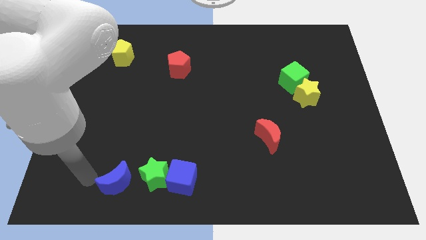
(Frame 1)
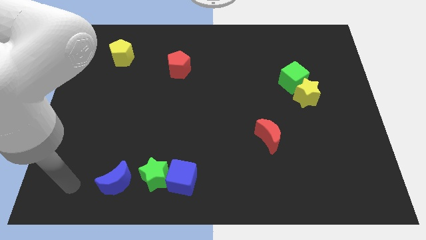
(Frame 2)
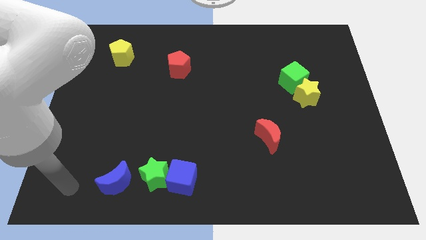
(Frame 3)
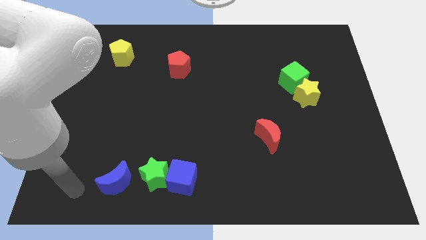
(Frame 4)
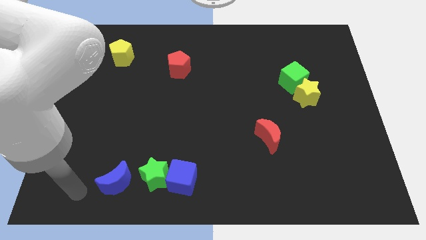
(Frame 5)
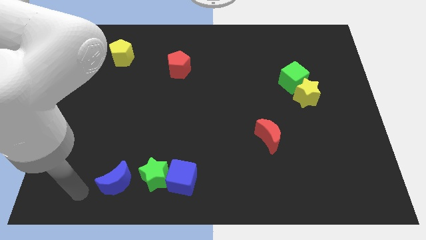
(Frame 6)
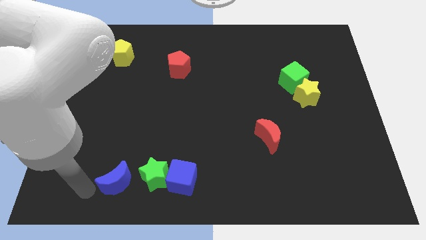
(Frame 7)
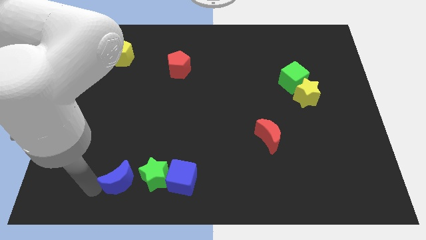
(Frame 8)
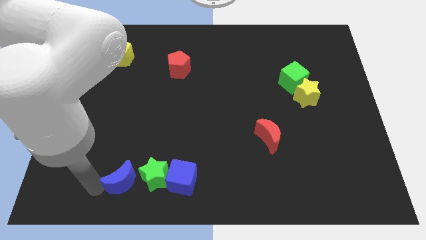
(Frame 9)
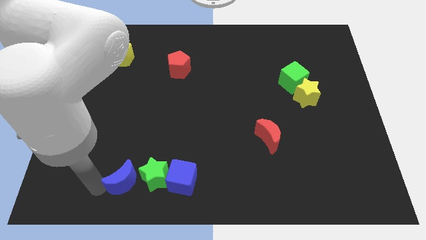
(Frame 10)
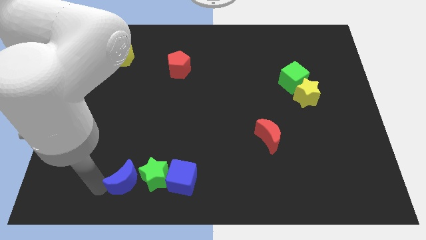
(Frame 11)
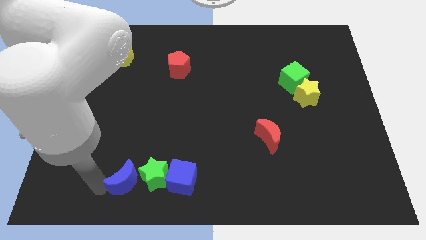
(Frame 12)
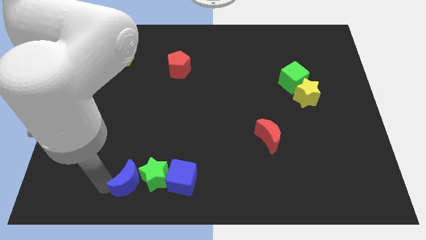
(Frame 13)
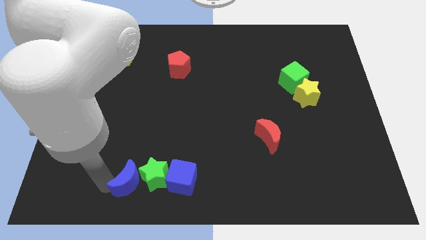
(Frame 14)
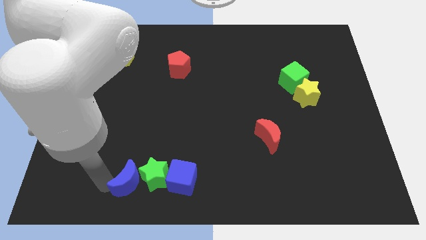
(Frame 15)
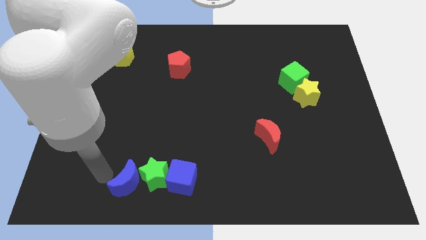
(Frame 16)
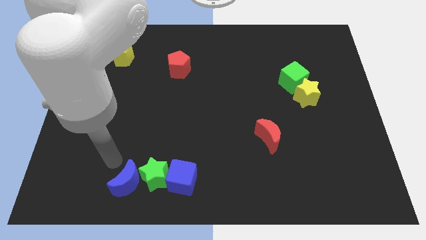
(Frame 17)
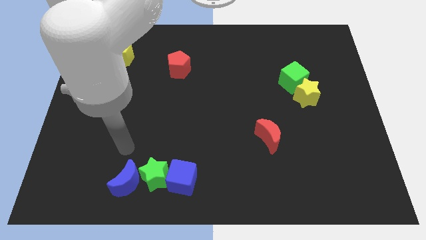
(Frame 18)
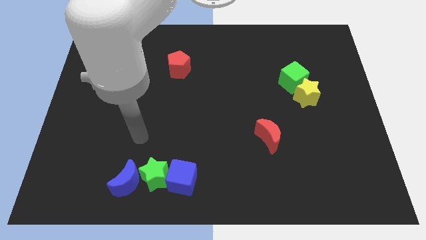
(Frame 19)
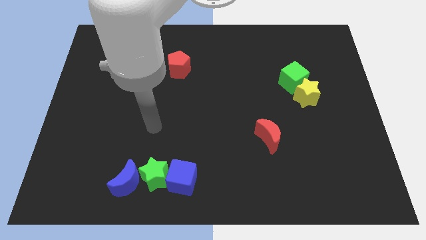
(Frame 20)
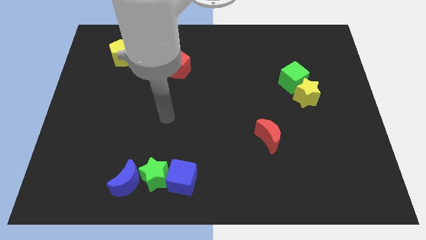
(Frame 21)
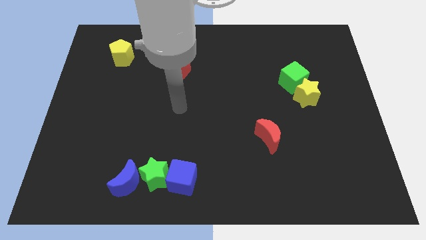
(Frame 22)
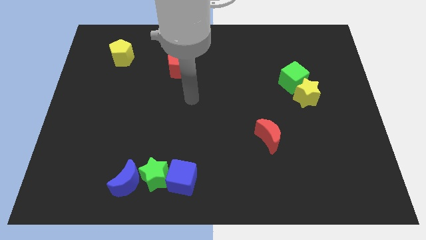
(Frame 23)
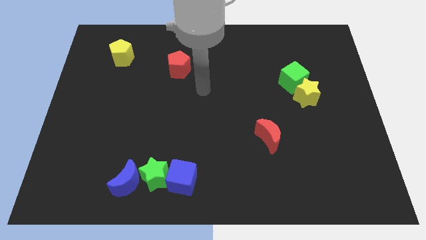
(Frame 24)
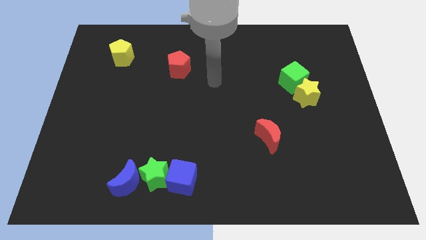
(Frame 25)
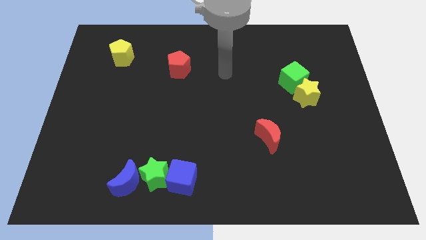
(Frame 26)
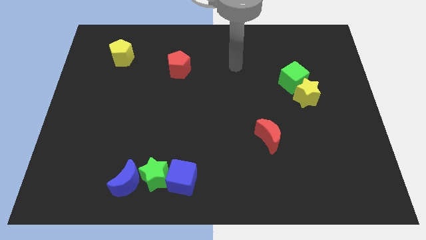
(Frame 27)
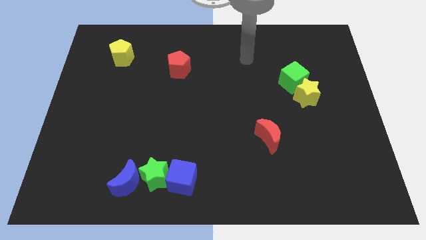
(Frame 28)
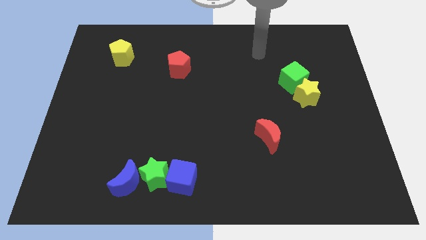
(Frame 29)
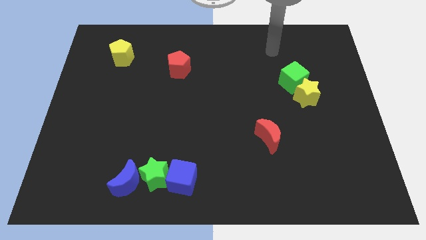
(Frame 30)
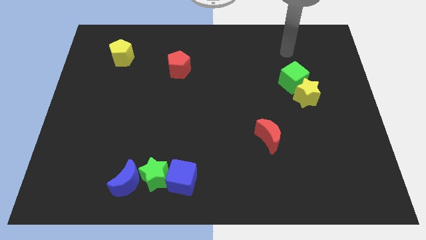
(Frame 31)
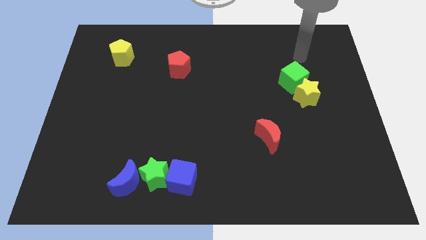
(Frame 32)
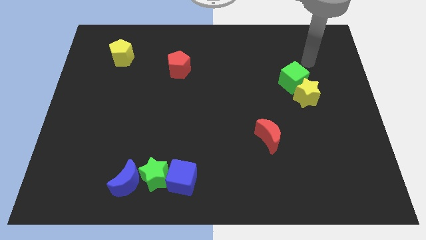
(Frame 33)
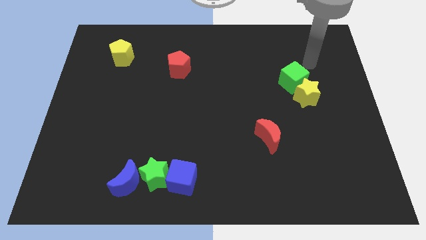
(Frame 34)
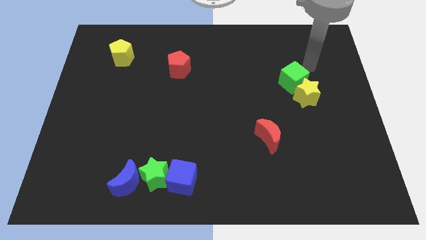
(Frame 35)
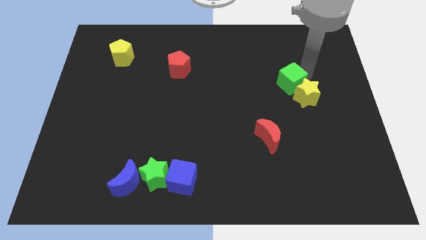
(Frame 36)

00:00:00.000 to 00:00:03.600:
push blue moon into green star

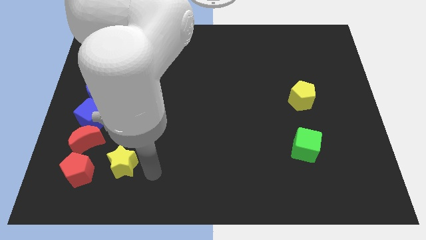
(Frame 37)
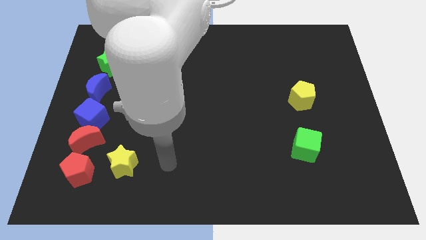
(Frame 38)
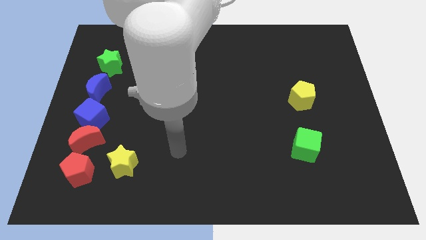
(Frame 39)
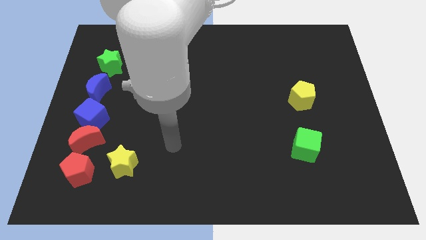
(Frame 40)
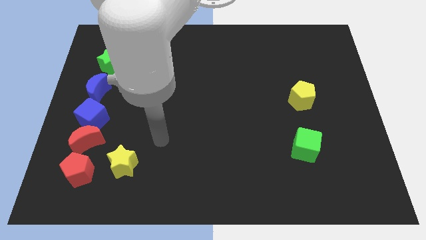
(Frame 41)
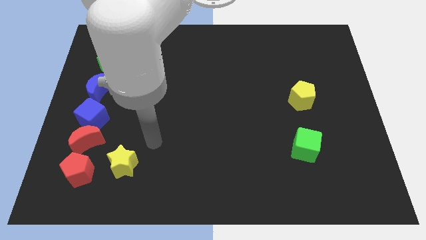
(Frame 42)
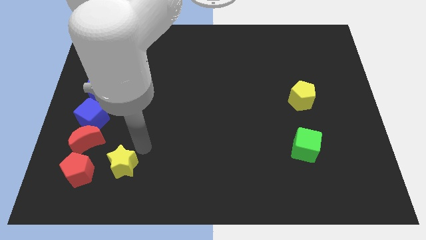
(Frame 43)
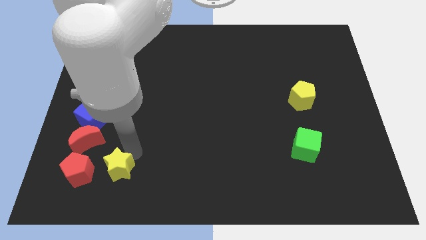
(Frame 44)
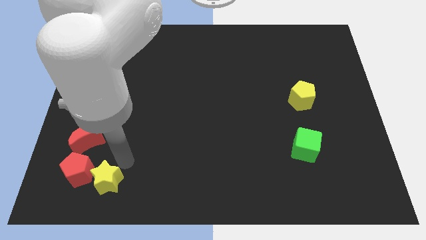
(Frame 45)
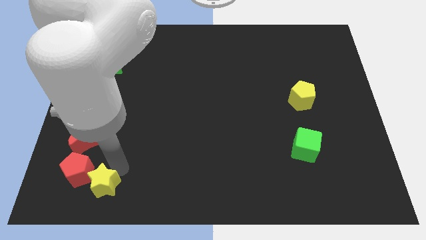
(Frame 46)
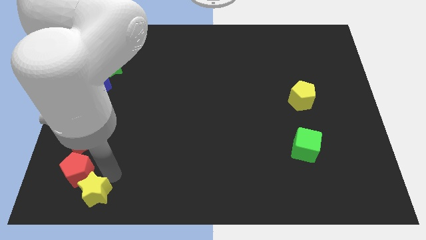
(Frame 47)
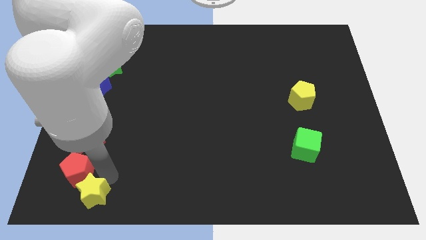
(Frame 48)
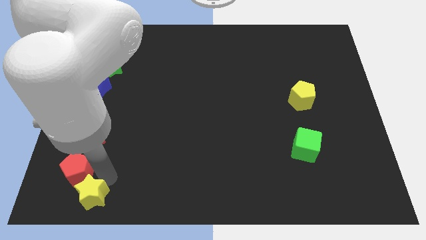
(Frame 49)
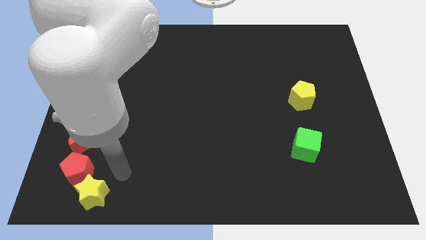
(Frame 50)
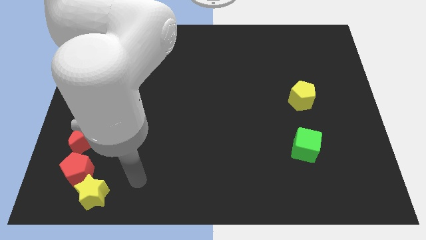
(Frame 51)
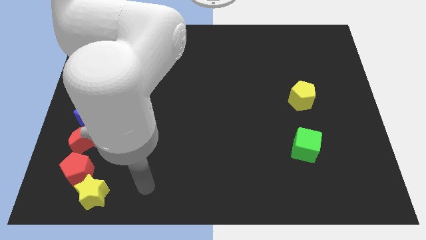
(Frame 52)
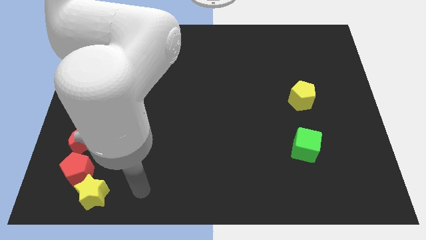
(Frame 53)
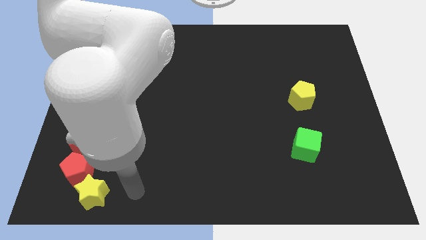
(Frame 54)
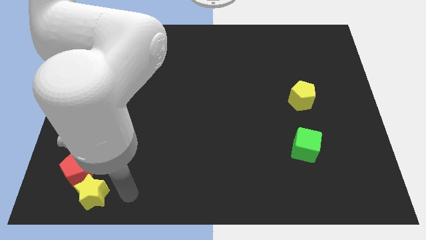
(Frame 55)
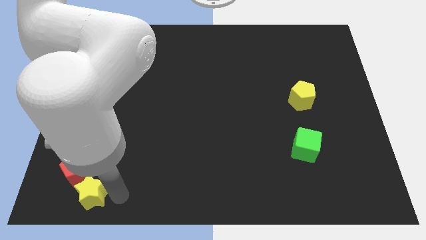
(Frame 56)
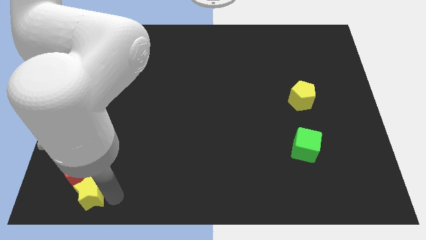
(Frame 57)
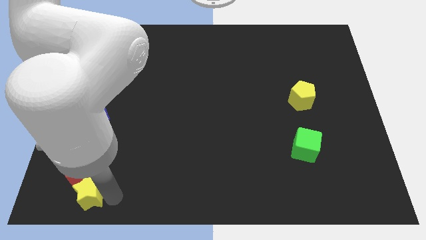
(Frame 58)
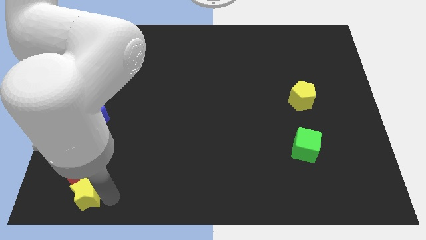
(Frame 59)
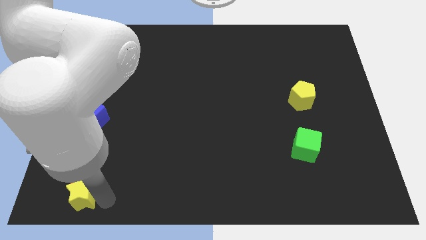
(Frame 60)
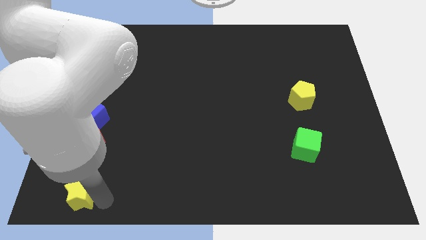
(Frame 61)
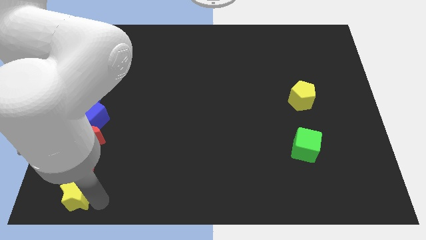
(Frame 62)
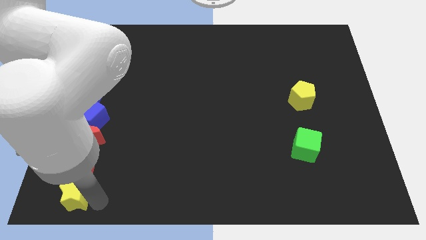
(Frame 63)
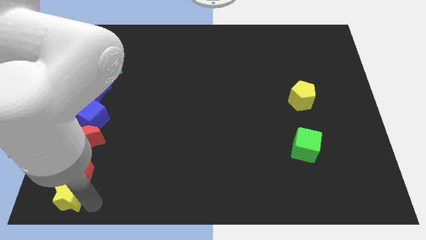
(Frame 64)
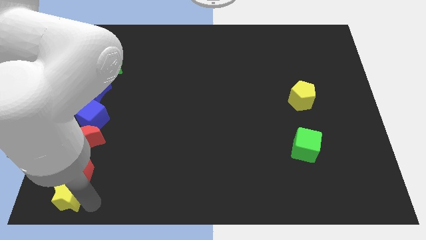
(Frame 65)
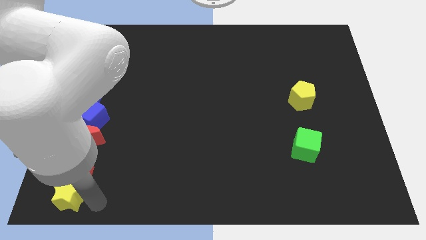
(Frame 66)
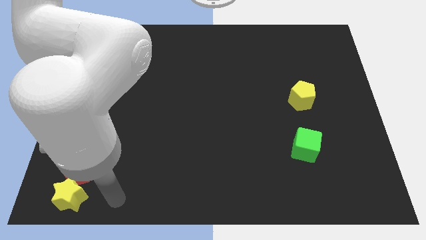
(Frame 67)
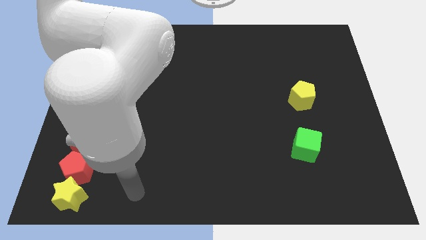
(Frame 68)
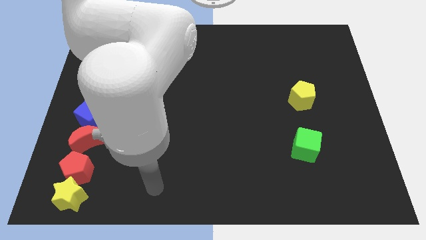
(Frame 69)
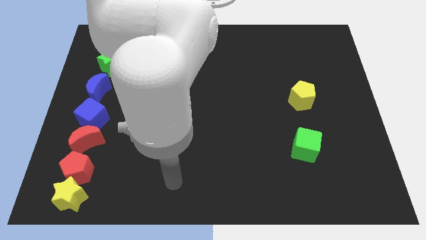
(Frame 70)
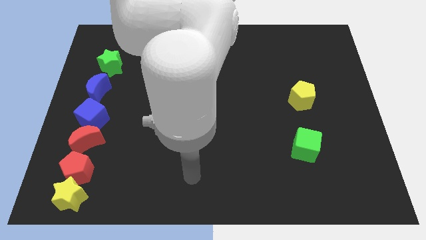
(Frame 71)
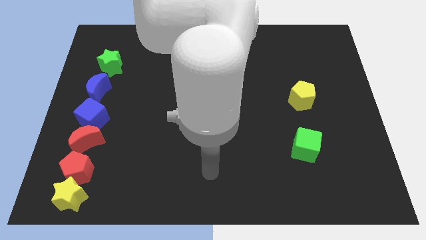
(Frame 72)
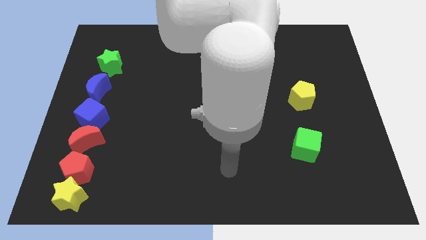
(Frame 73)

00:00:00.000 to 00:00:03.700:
place yellow star vertically in a line of other blocks

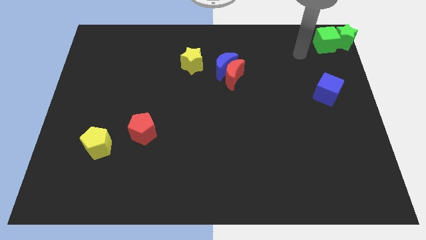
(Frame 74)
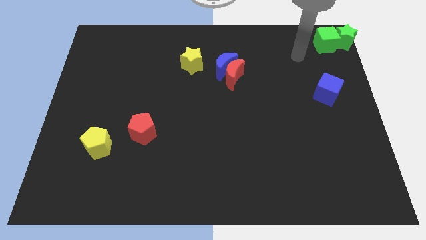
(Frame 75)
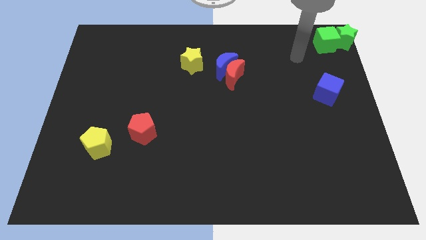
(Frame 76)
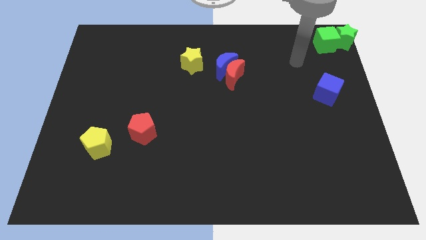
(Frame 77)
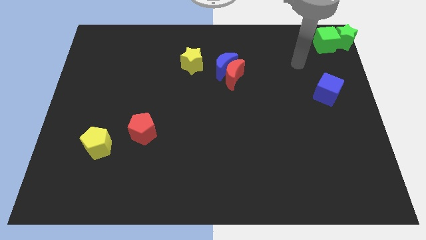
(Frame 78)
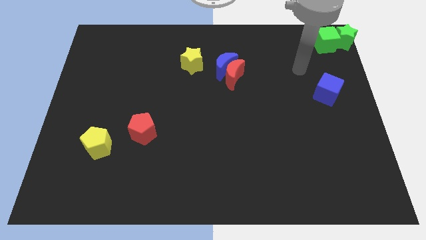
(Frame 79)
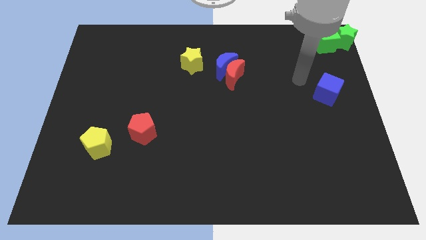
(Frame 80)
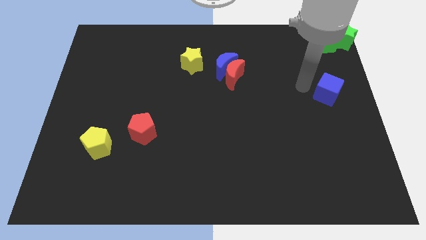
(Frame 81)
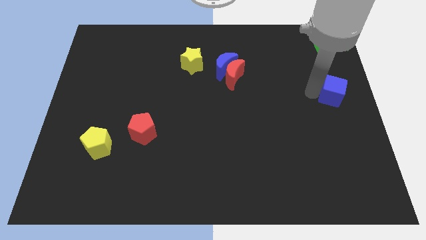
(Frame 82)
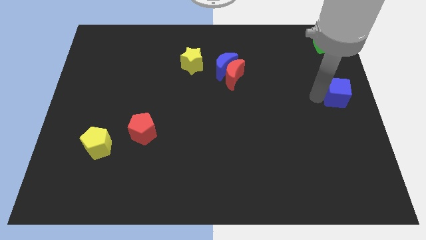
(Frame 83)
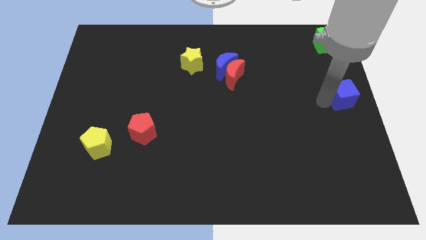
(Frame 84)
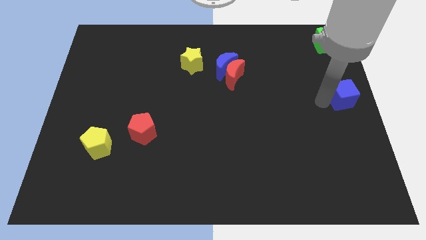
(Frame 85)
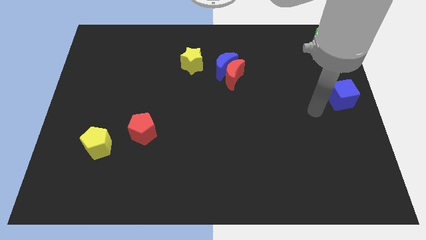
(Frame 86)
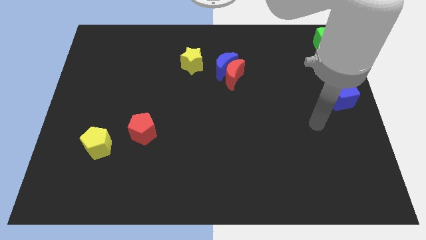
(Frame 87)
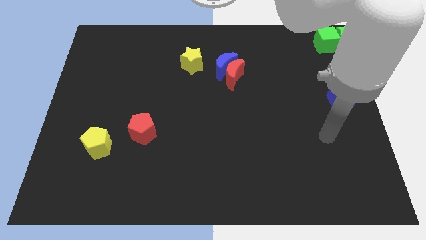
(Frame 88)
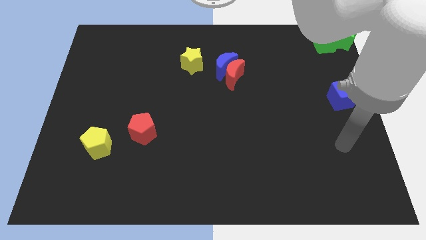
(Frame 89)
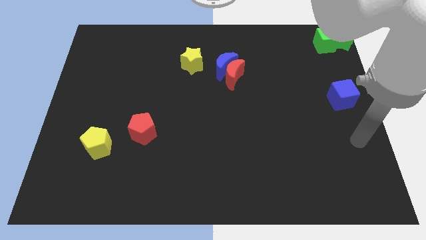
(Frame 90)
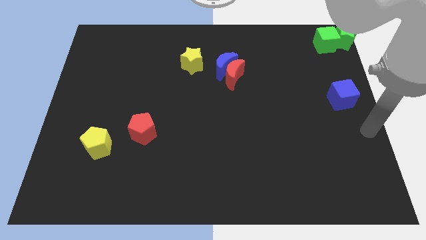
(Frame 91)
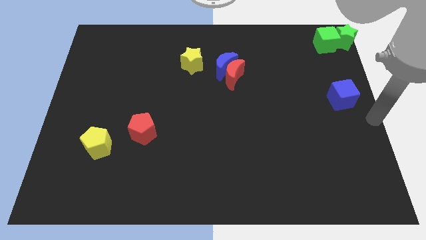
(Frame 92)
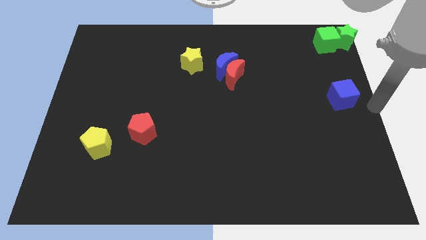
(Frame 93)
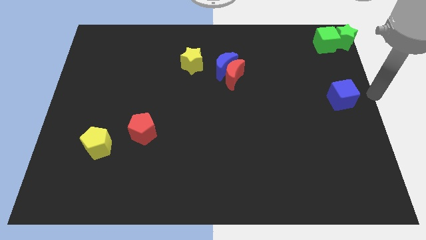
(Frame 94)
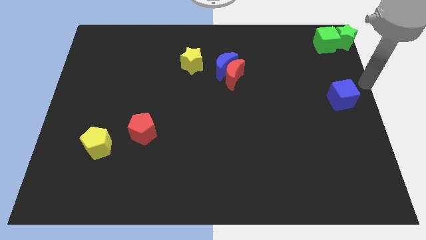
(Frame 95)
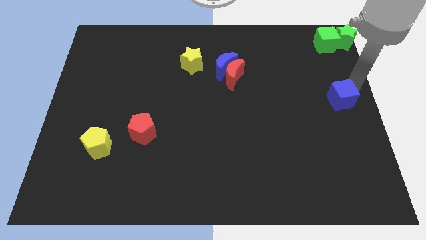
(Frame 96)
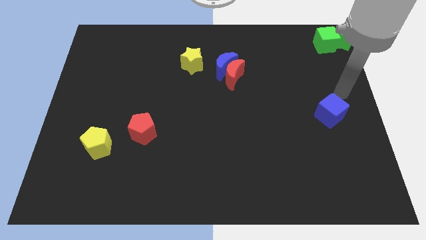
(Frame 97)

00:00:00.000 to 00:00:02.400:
push the blue cube to the right center of the board
